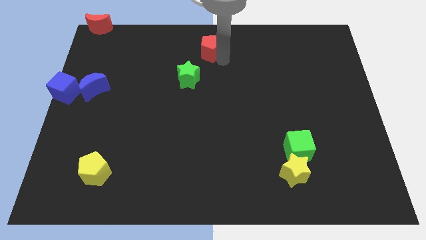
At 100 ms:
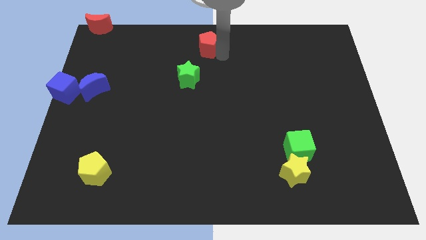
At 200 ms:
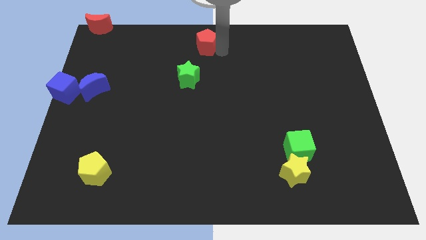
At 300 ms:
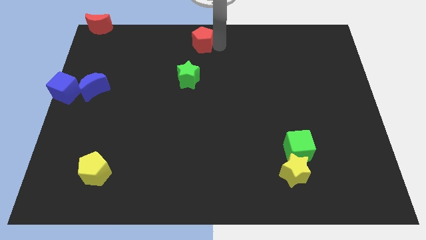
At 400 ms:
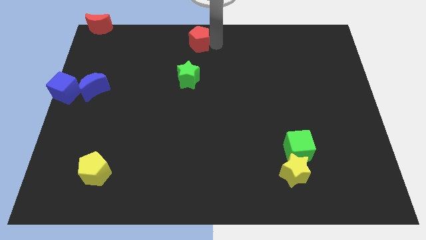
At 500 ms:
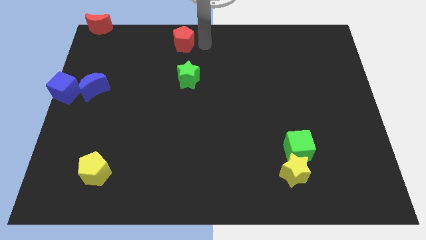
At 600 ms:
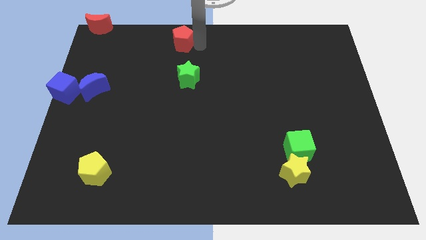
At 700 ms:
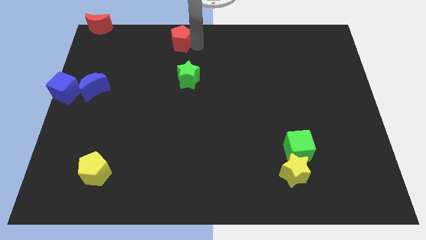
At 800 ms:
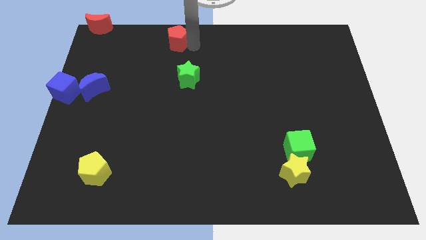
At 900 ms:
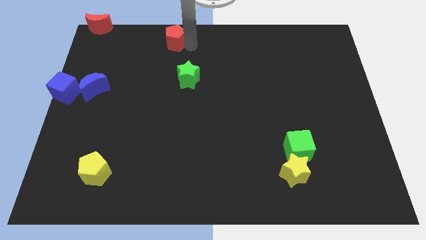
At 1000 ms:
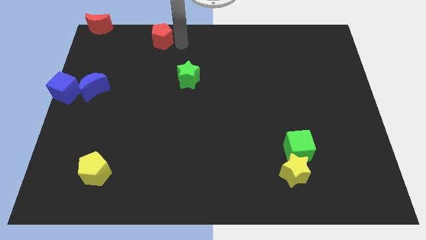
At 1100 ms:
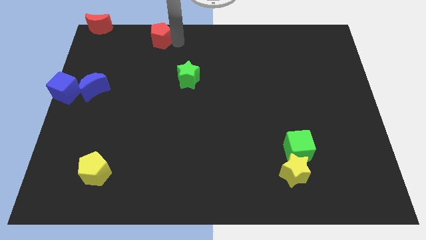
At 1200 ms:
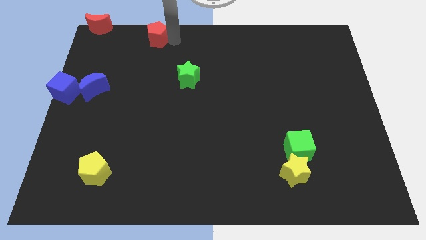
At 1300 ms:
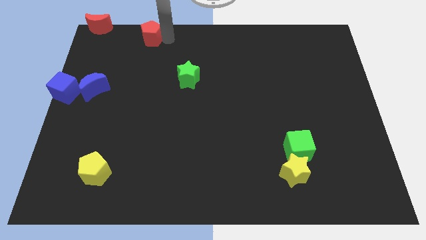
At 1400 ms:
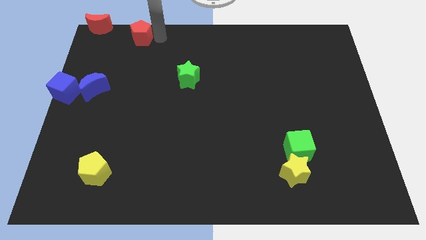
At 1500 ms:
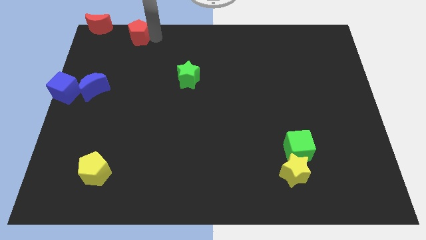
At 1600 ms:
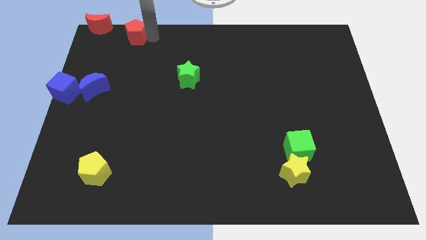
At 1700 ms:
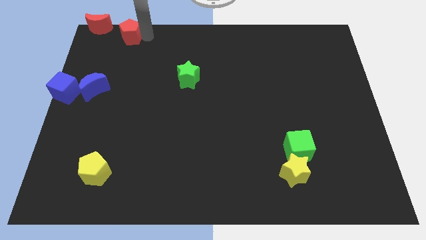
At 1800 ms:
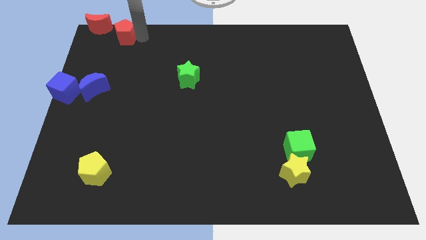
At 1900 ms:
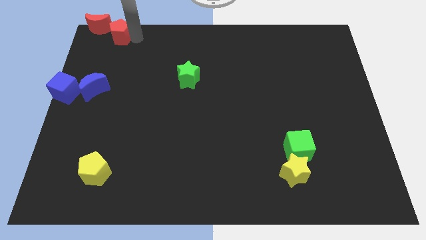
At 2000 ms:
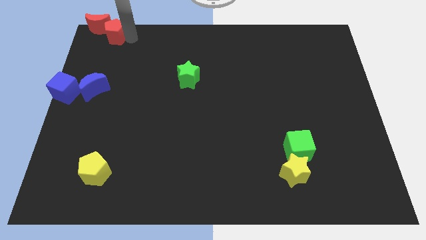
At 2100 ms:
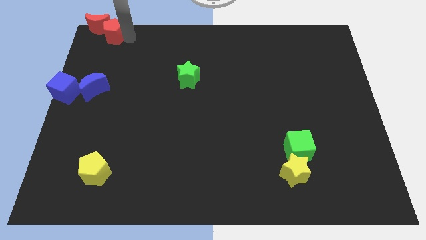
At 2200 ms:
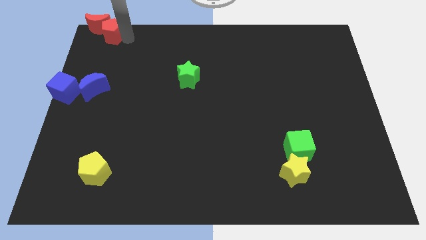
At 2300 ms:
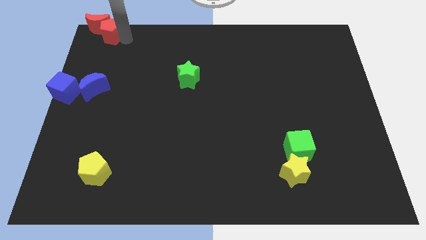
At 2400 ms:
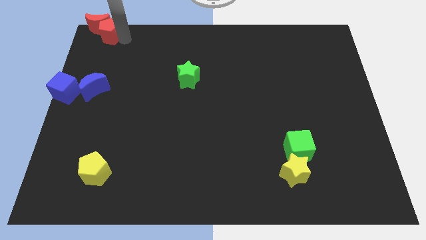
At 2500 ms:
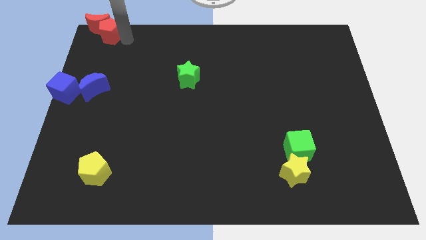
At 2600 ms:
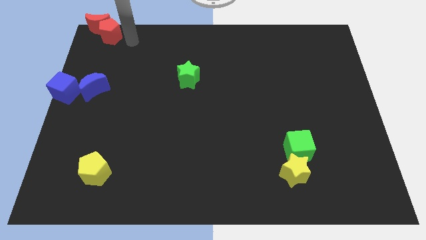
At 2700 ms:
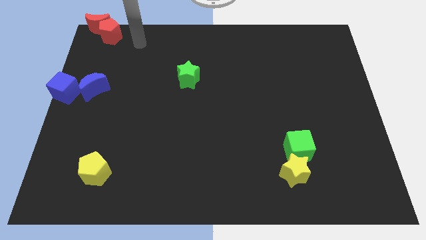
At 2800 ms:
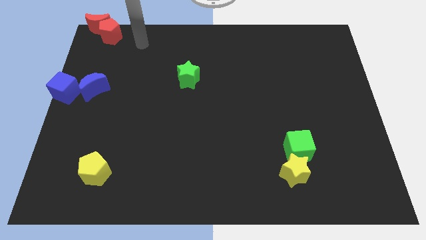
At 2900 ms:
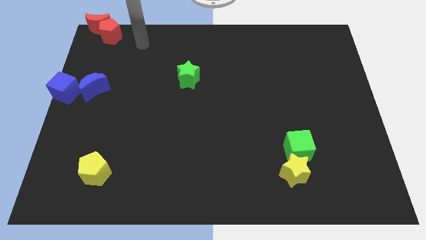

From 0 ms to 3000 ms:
move the red pentagon into the red moon diagonally below

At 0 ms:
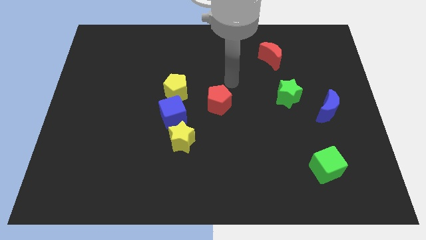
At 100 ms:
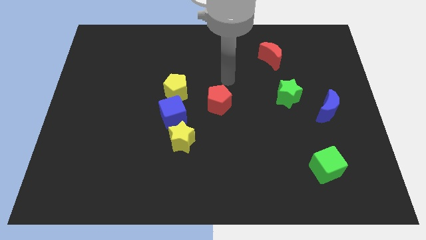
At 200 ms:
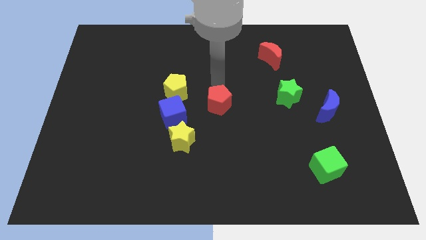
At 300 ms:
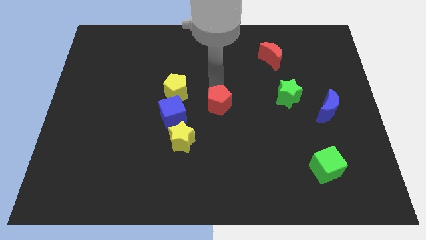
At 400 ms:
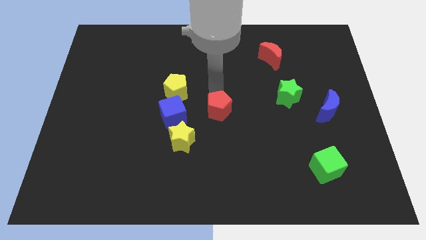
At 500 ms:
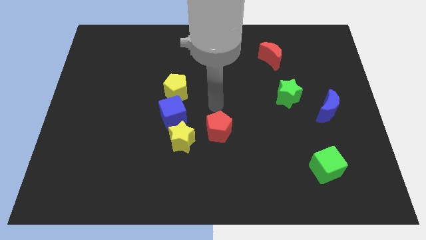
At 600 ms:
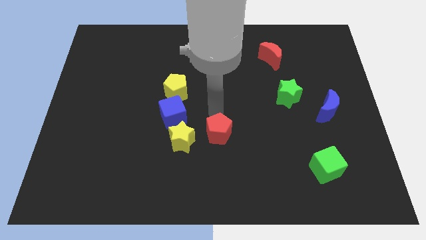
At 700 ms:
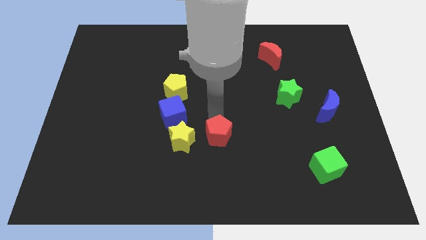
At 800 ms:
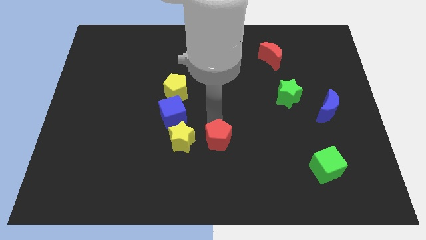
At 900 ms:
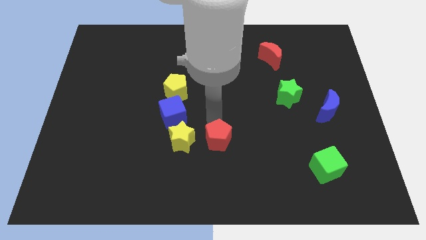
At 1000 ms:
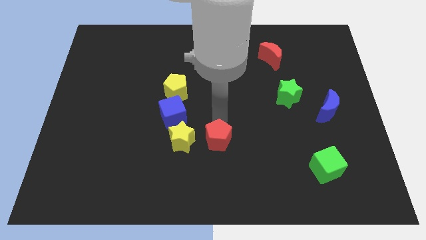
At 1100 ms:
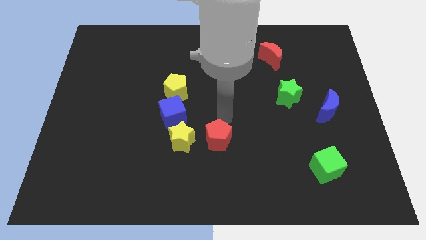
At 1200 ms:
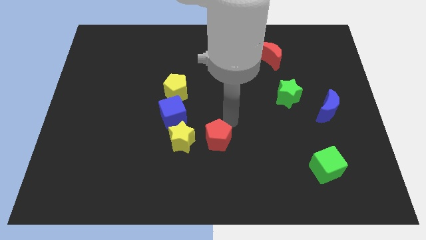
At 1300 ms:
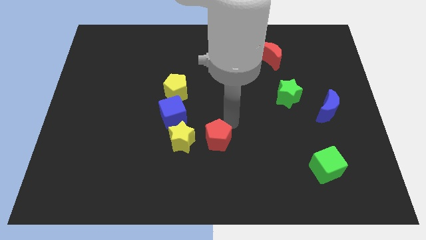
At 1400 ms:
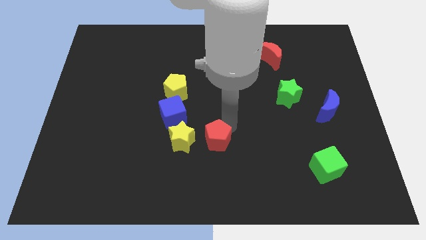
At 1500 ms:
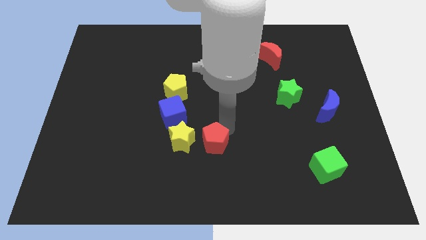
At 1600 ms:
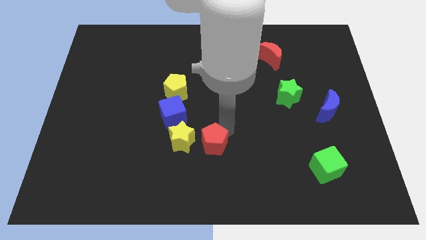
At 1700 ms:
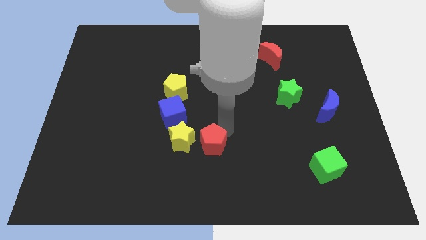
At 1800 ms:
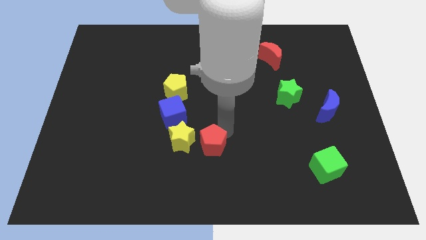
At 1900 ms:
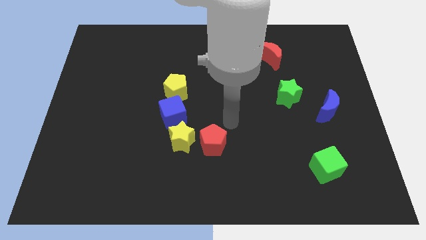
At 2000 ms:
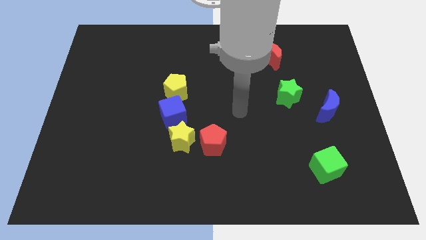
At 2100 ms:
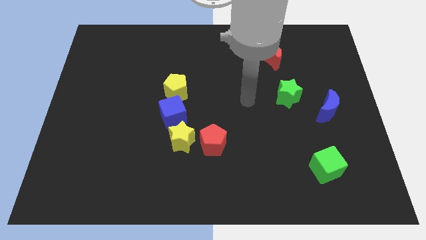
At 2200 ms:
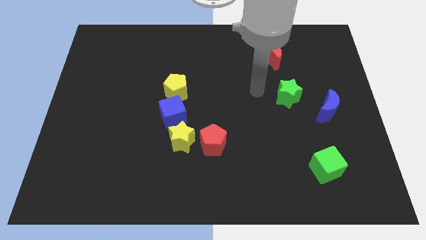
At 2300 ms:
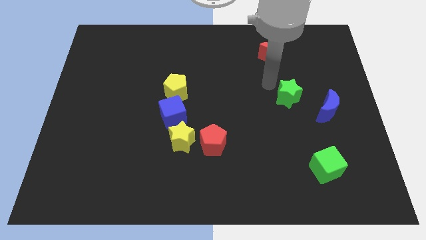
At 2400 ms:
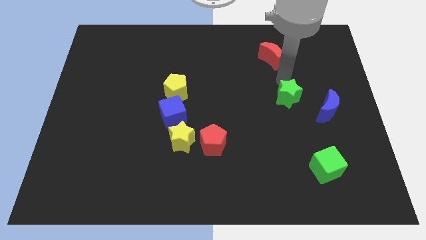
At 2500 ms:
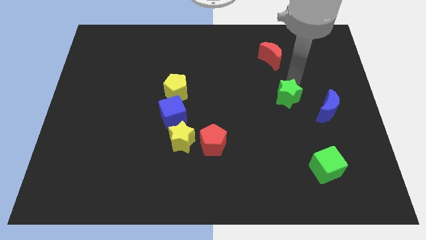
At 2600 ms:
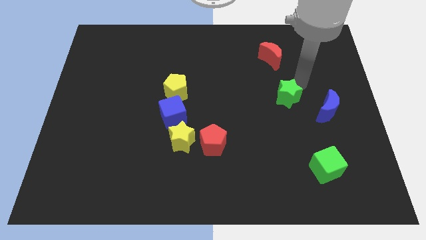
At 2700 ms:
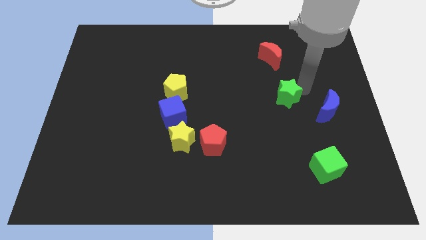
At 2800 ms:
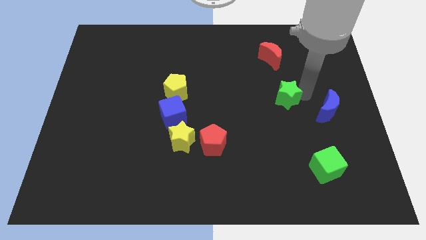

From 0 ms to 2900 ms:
move the red pentagon to the right of the yellow star

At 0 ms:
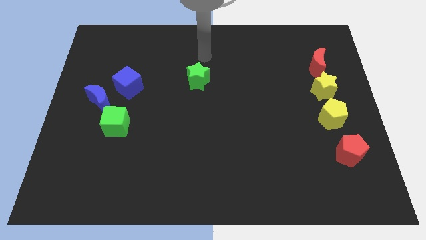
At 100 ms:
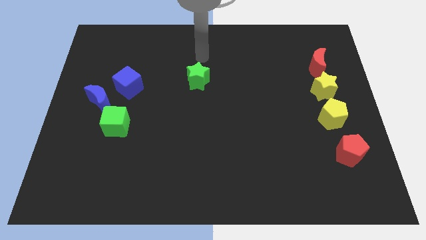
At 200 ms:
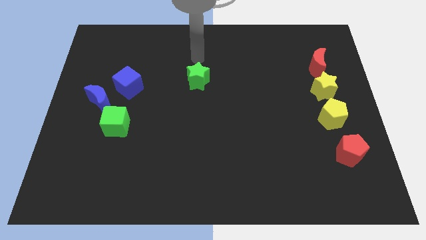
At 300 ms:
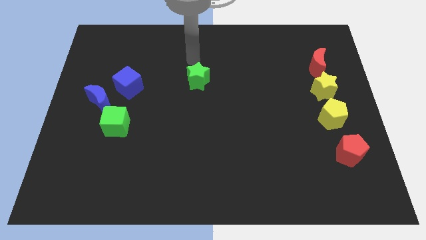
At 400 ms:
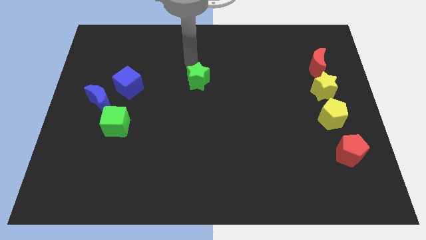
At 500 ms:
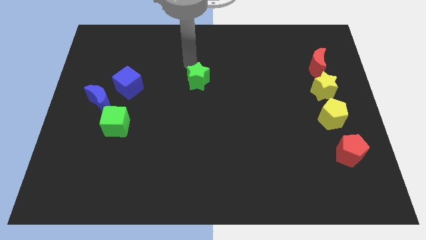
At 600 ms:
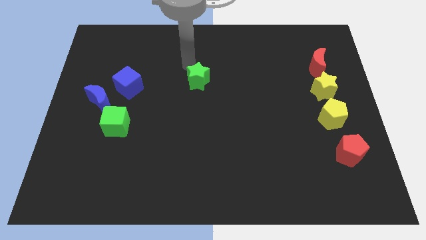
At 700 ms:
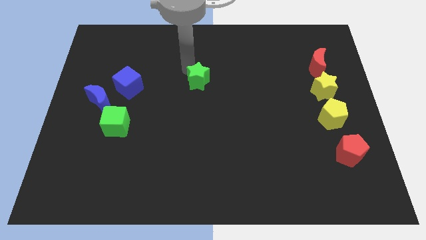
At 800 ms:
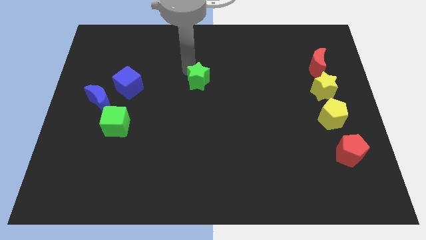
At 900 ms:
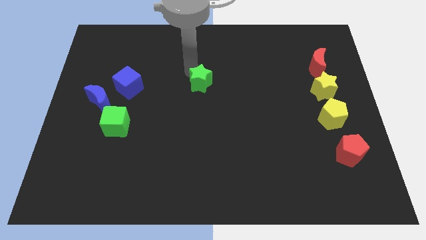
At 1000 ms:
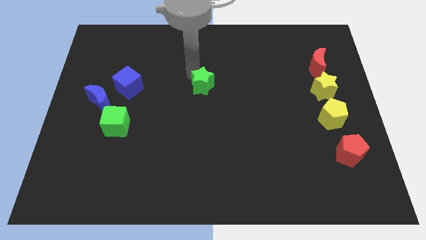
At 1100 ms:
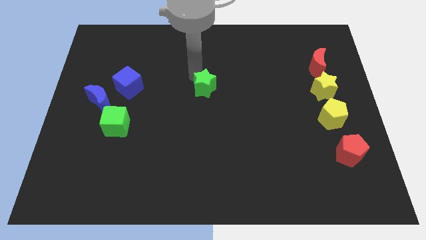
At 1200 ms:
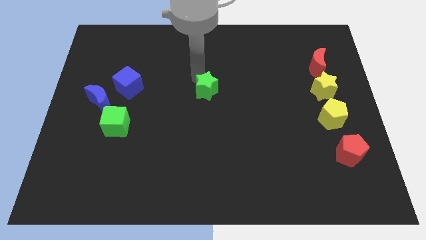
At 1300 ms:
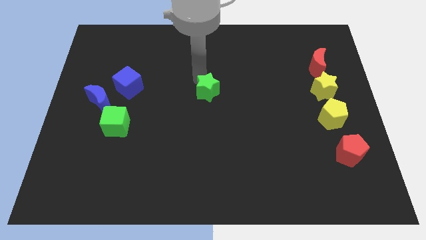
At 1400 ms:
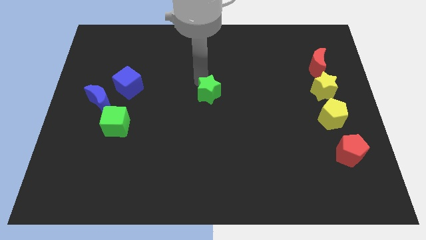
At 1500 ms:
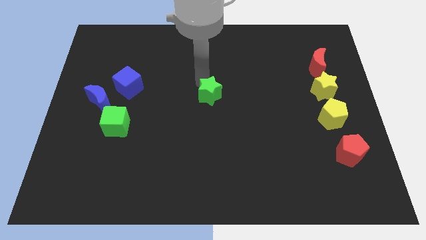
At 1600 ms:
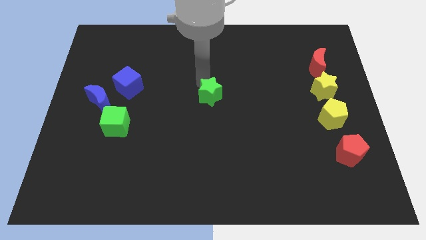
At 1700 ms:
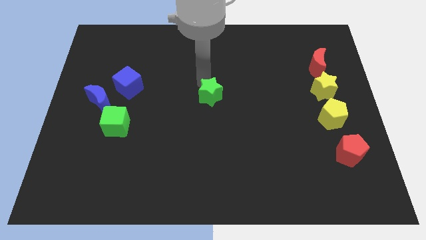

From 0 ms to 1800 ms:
push the green star towards the bottom

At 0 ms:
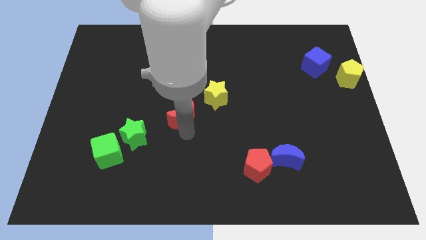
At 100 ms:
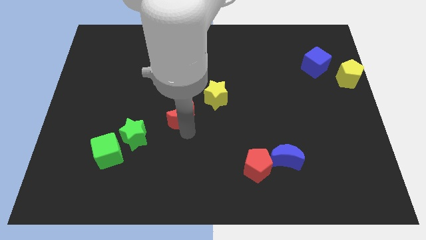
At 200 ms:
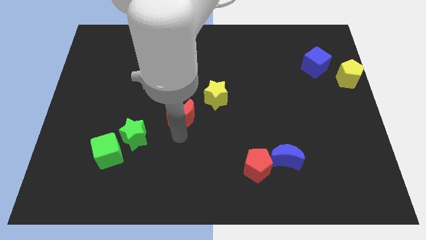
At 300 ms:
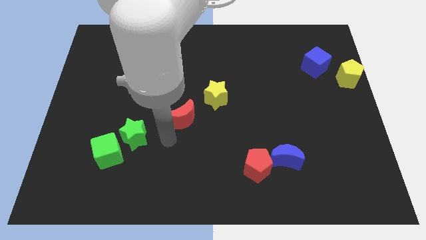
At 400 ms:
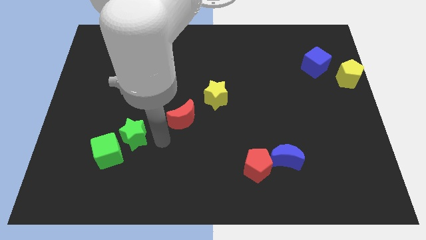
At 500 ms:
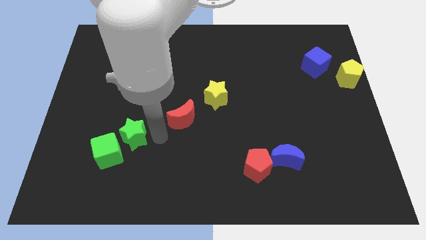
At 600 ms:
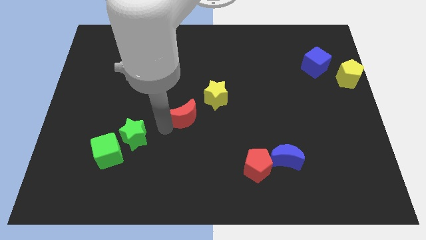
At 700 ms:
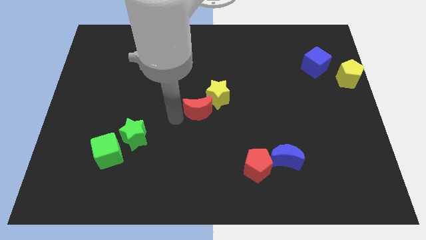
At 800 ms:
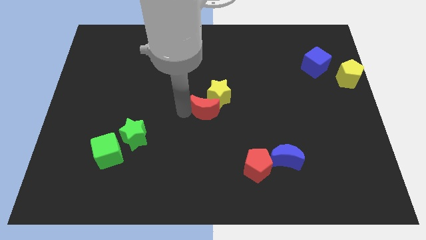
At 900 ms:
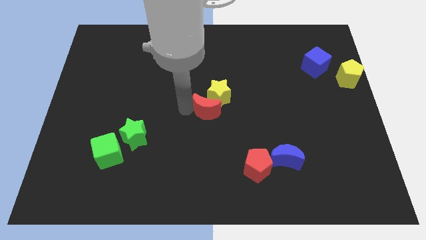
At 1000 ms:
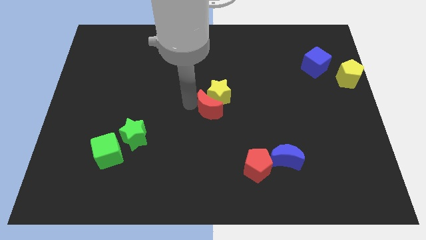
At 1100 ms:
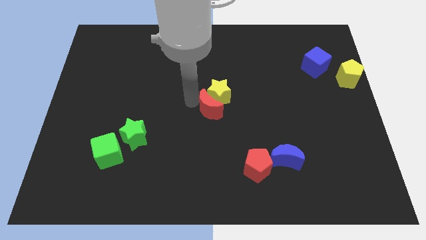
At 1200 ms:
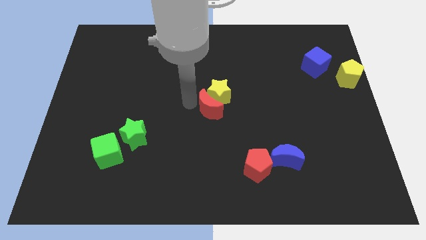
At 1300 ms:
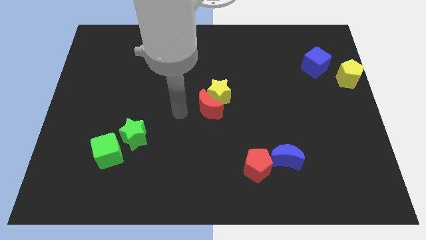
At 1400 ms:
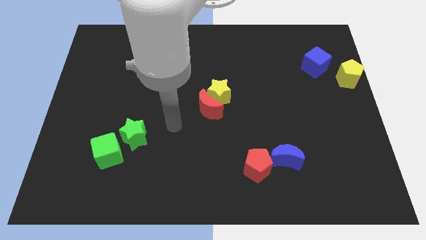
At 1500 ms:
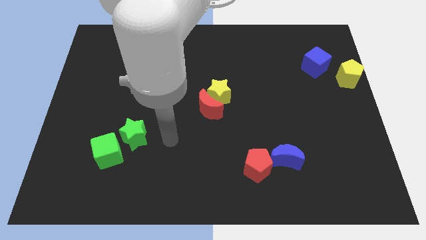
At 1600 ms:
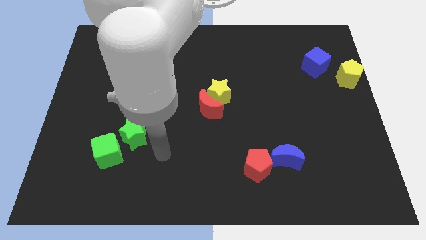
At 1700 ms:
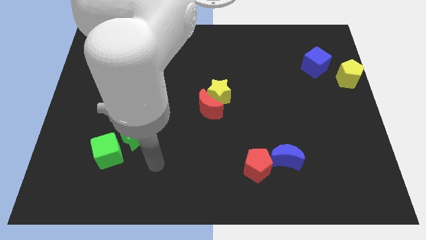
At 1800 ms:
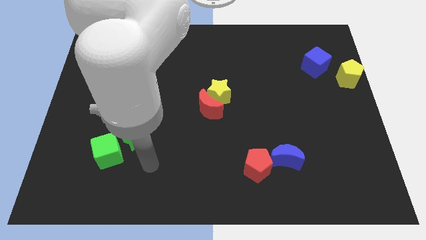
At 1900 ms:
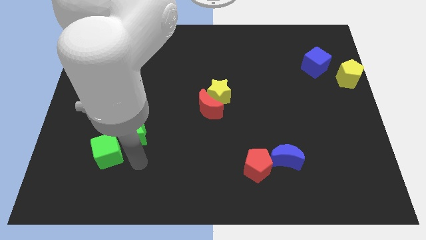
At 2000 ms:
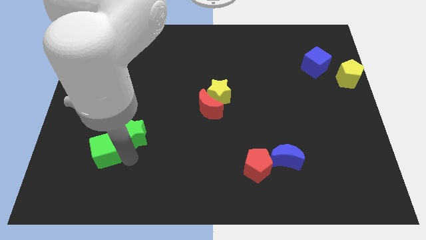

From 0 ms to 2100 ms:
push the red moon into the yellow star
